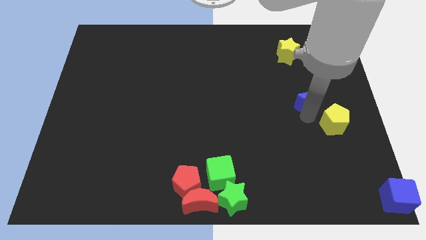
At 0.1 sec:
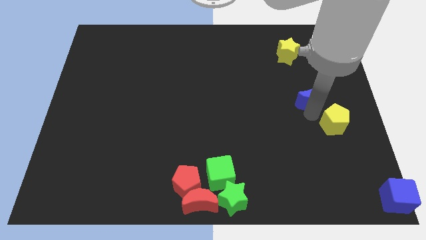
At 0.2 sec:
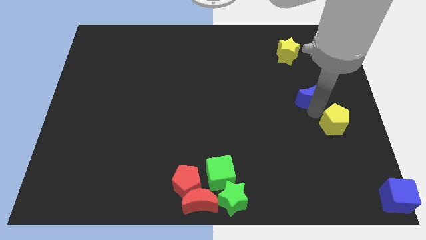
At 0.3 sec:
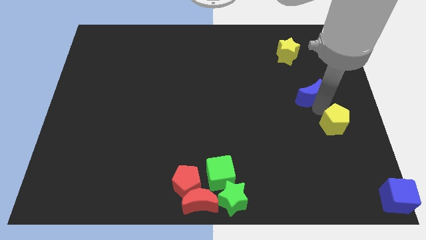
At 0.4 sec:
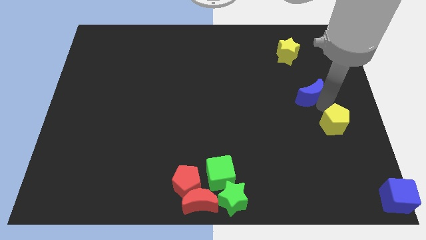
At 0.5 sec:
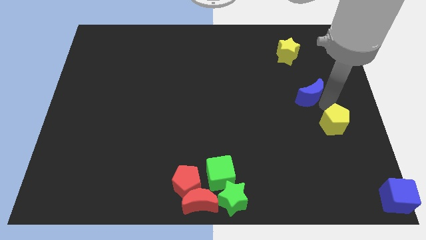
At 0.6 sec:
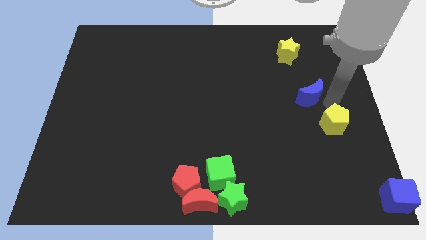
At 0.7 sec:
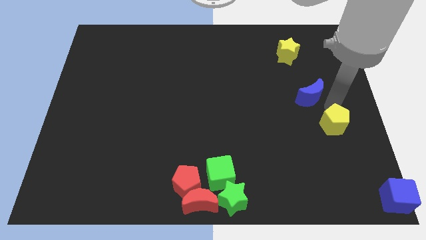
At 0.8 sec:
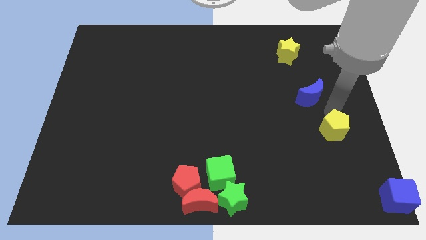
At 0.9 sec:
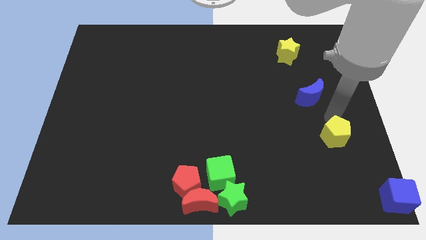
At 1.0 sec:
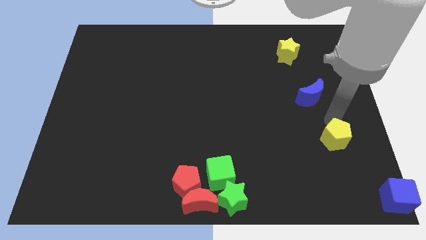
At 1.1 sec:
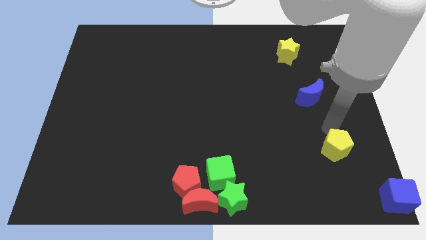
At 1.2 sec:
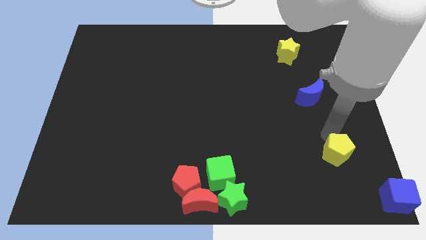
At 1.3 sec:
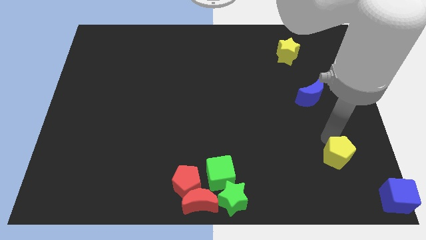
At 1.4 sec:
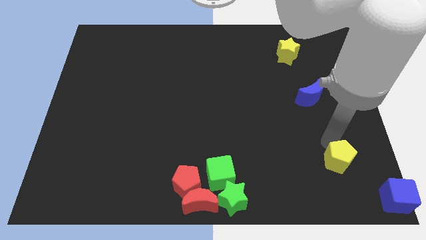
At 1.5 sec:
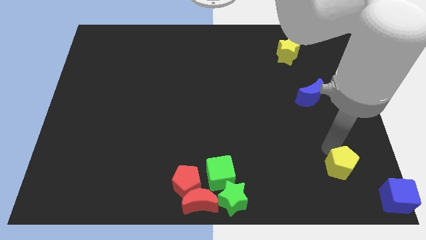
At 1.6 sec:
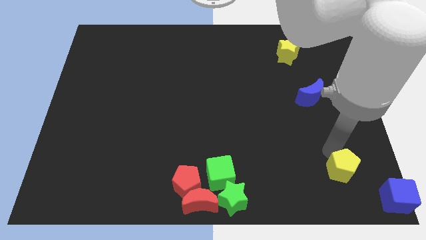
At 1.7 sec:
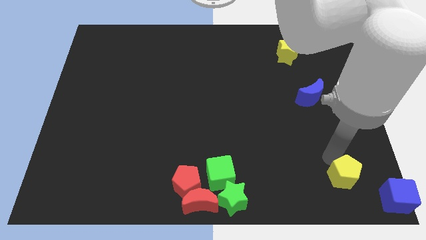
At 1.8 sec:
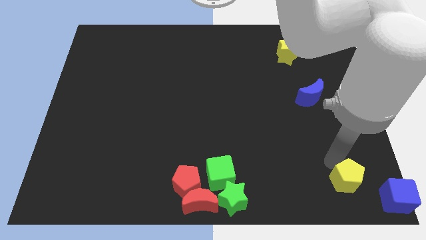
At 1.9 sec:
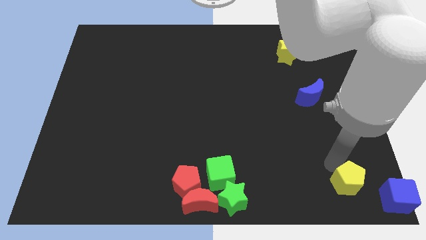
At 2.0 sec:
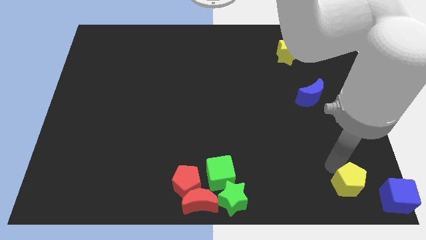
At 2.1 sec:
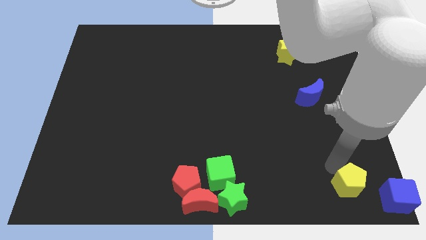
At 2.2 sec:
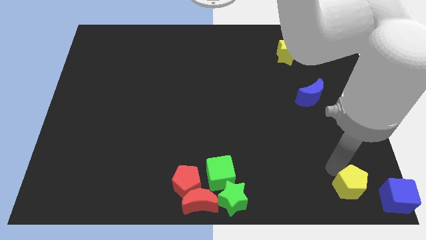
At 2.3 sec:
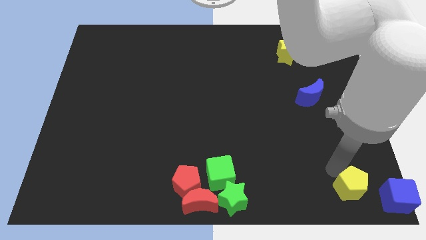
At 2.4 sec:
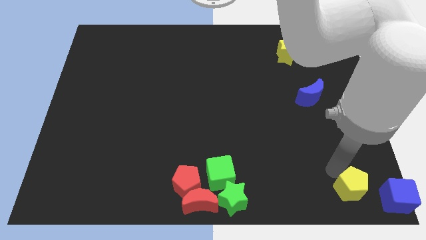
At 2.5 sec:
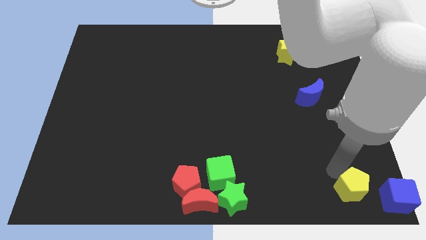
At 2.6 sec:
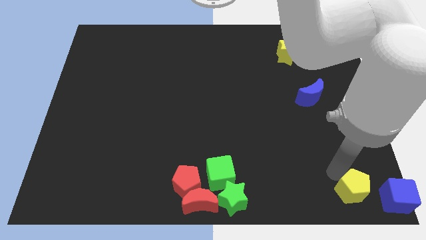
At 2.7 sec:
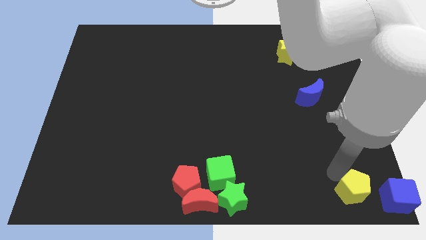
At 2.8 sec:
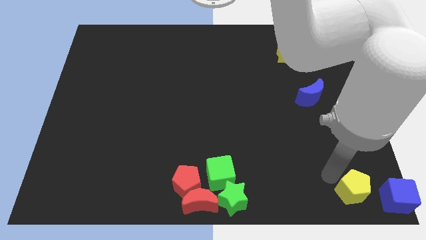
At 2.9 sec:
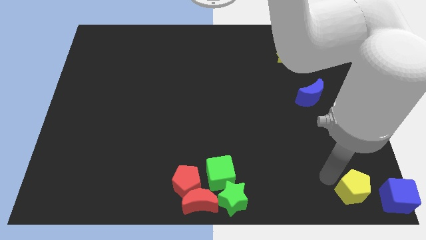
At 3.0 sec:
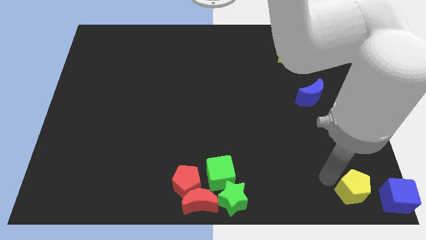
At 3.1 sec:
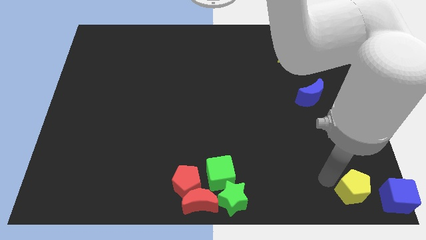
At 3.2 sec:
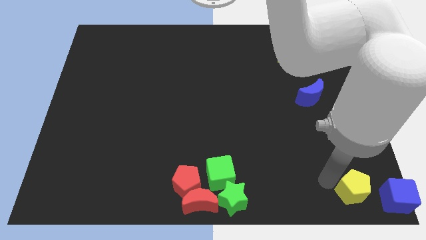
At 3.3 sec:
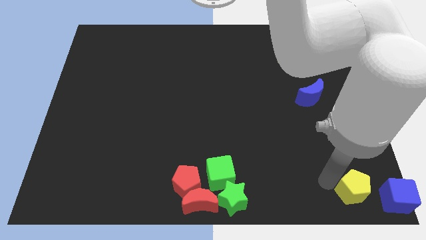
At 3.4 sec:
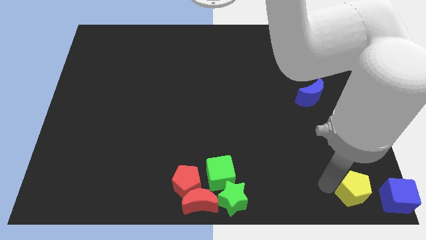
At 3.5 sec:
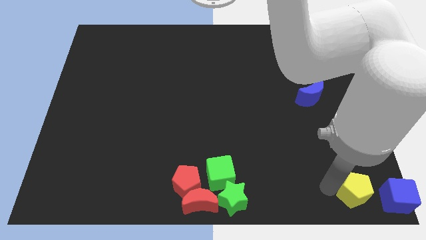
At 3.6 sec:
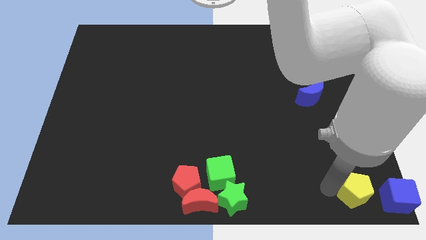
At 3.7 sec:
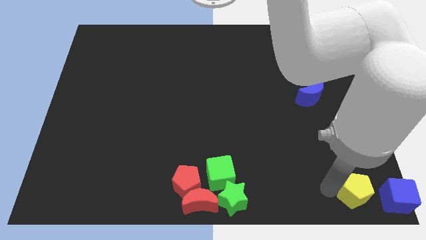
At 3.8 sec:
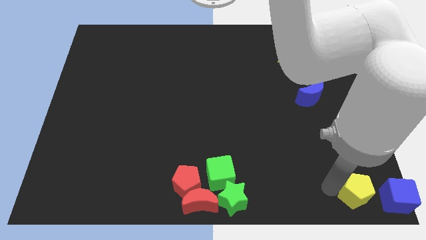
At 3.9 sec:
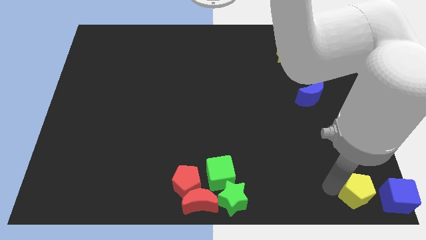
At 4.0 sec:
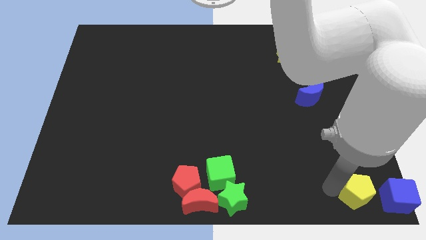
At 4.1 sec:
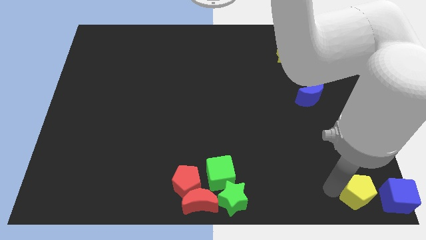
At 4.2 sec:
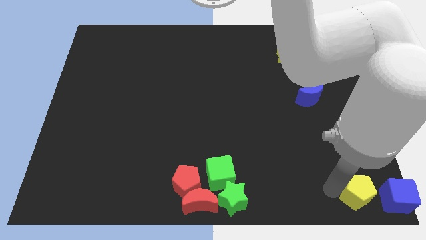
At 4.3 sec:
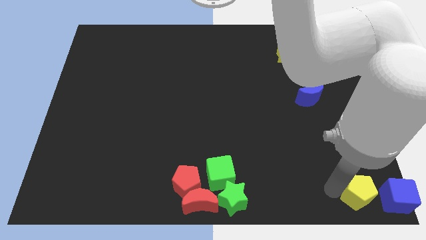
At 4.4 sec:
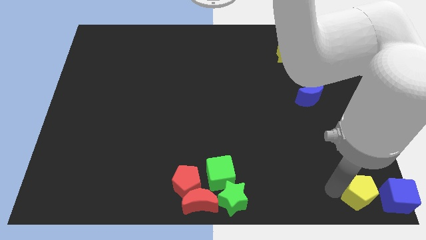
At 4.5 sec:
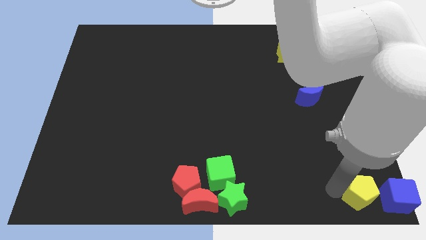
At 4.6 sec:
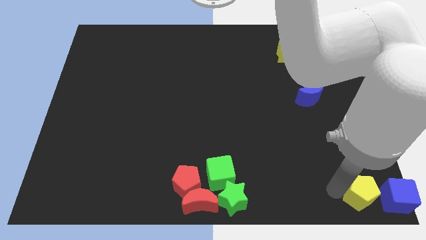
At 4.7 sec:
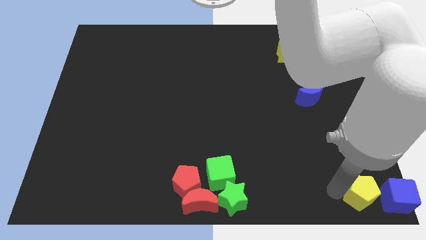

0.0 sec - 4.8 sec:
push yellow pentagon to bottom right of the board

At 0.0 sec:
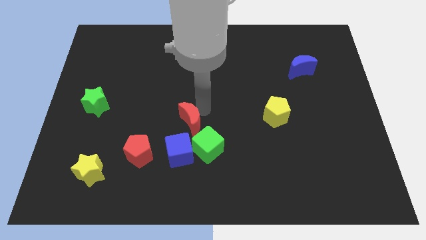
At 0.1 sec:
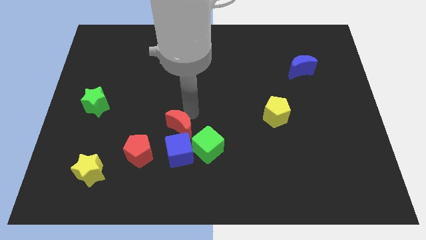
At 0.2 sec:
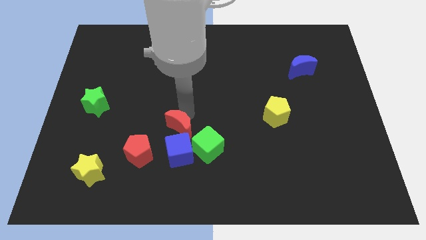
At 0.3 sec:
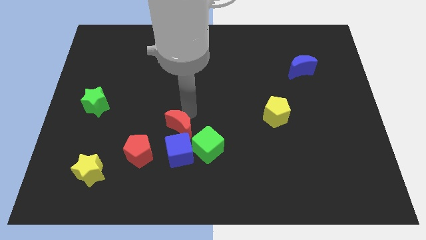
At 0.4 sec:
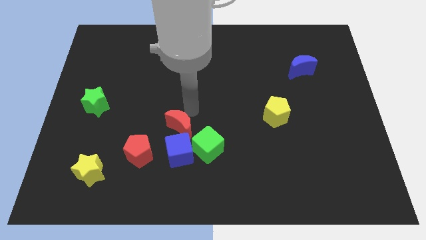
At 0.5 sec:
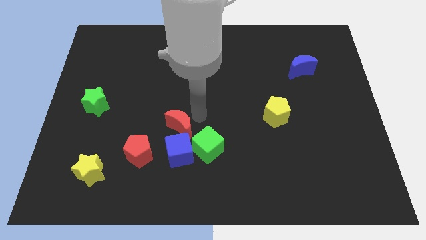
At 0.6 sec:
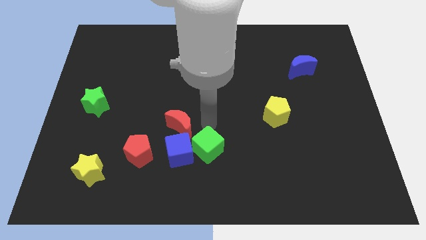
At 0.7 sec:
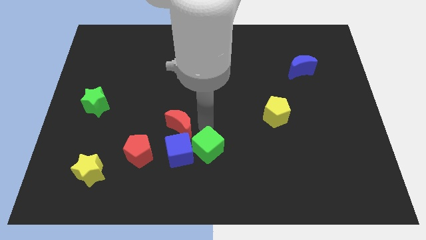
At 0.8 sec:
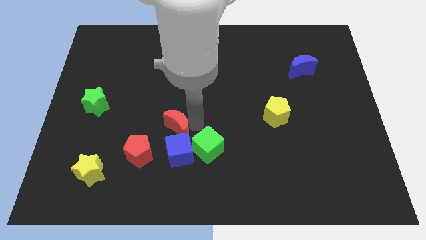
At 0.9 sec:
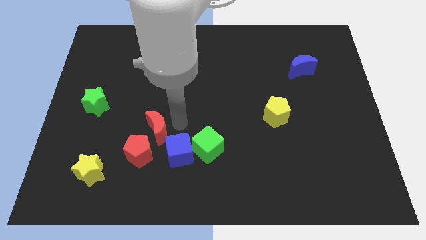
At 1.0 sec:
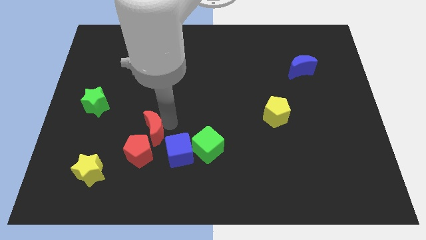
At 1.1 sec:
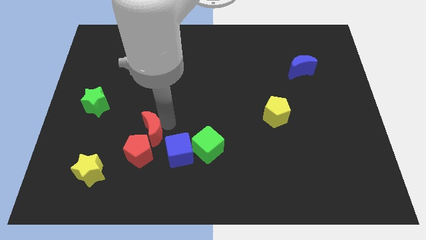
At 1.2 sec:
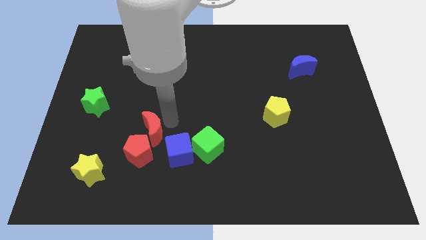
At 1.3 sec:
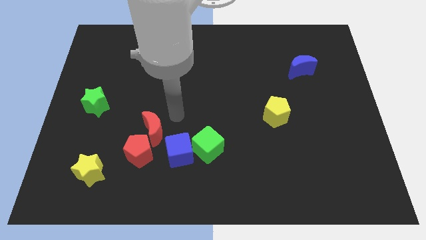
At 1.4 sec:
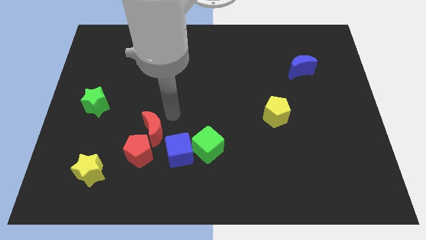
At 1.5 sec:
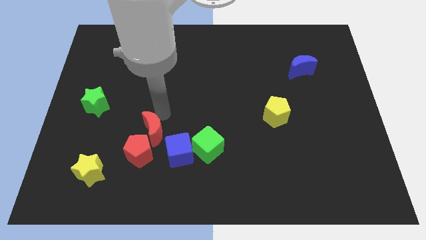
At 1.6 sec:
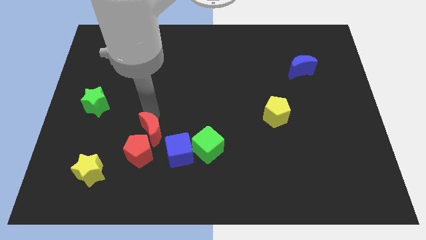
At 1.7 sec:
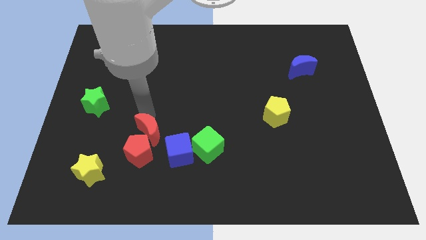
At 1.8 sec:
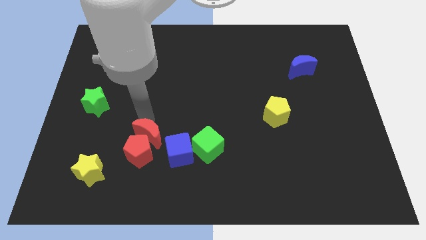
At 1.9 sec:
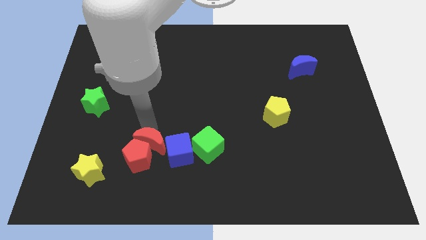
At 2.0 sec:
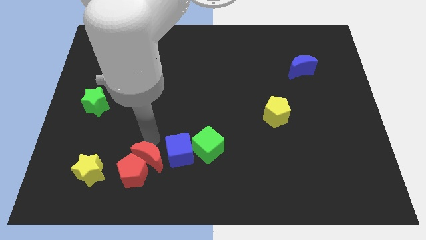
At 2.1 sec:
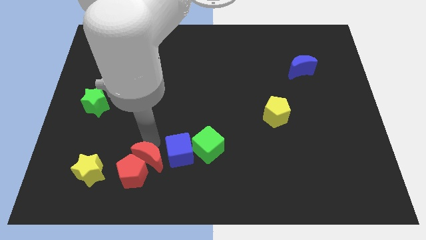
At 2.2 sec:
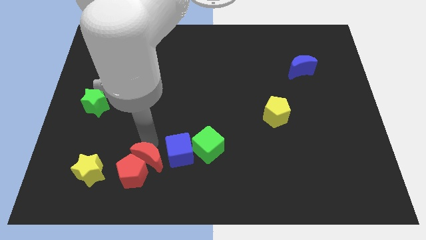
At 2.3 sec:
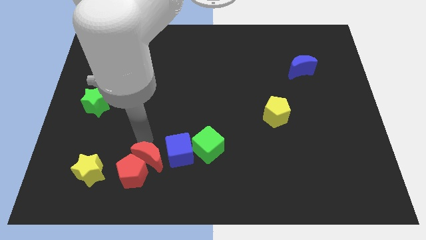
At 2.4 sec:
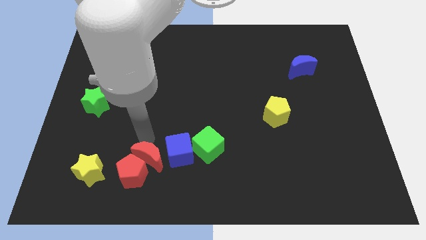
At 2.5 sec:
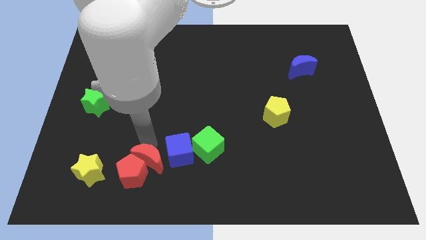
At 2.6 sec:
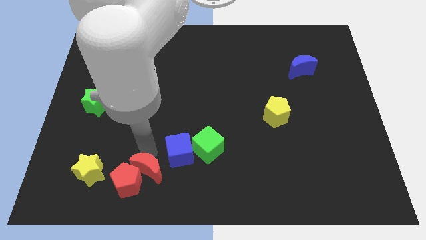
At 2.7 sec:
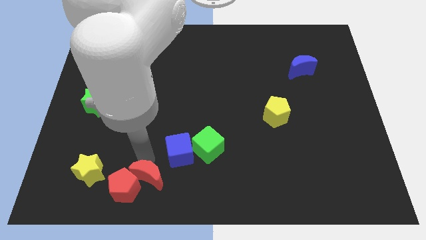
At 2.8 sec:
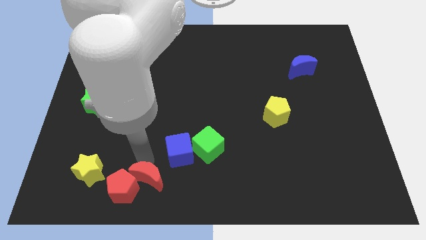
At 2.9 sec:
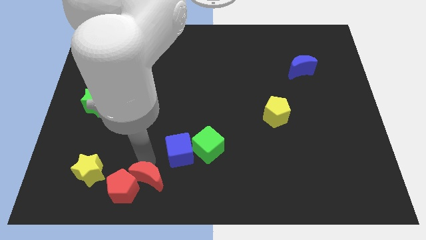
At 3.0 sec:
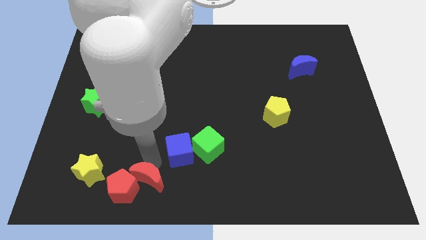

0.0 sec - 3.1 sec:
push red moon into red pentagon

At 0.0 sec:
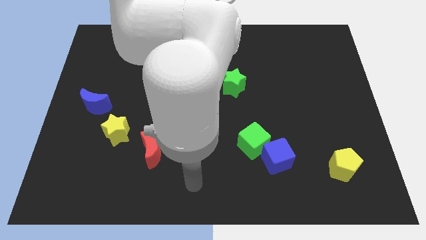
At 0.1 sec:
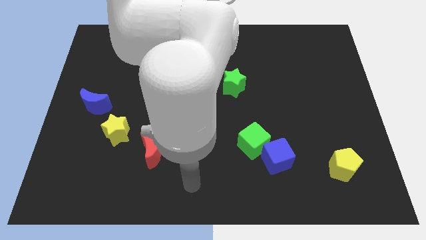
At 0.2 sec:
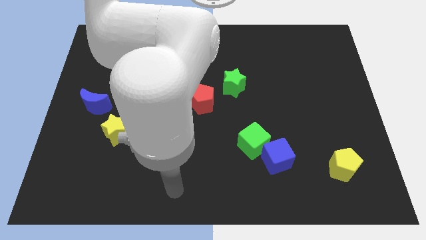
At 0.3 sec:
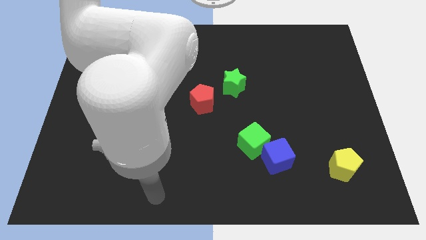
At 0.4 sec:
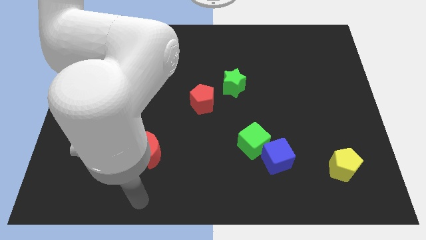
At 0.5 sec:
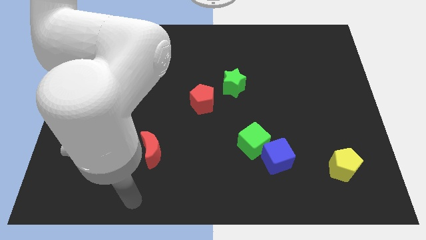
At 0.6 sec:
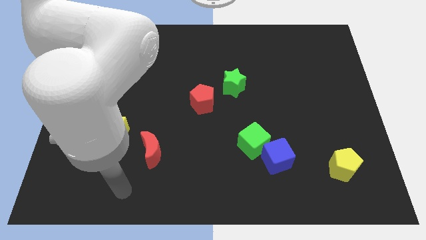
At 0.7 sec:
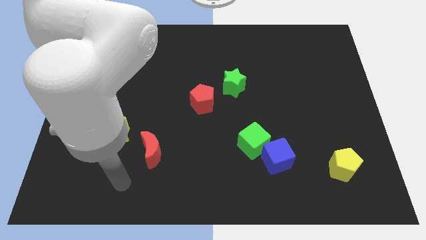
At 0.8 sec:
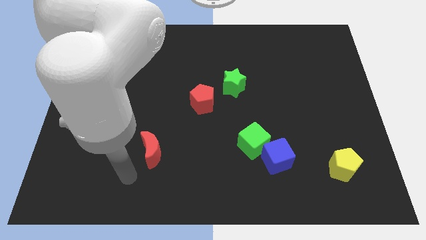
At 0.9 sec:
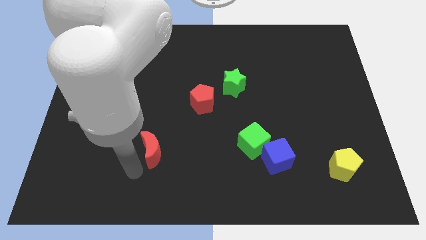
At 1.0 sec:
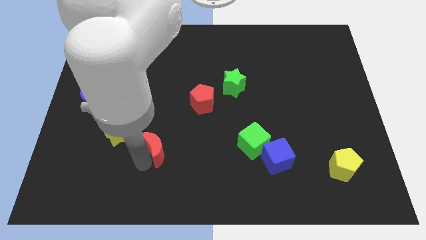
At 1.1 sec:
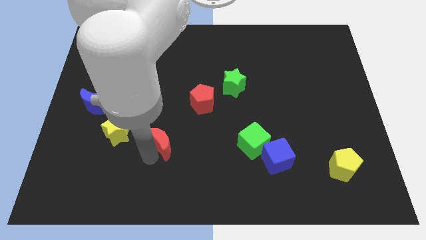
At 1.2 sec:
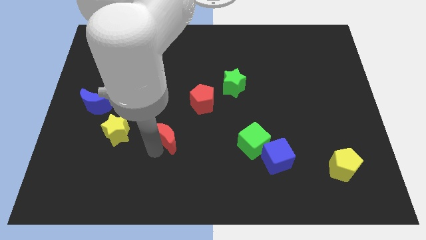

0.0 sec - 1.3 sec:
move the red moon slightly towards the red pentagon
